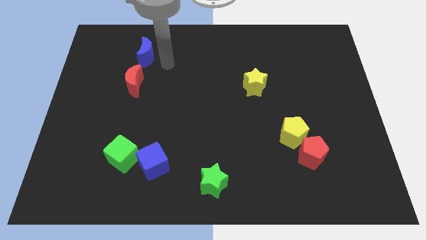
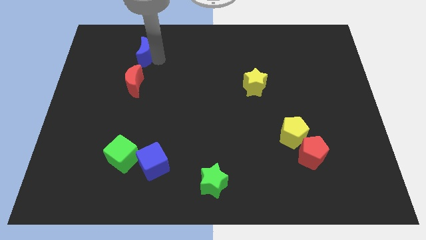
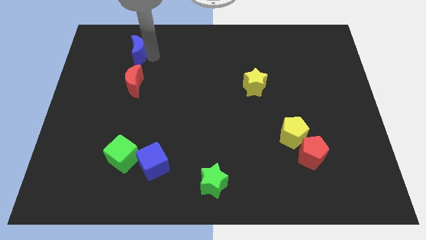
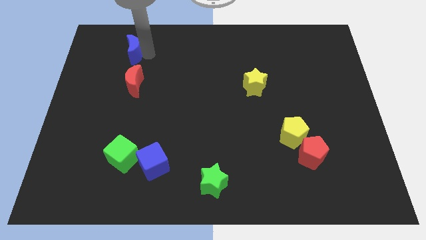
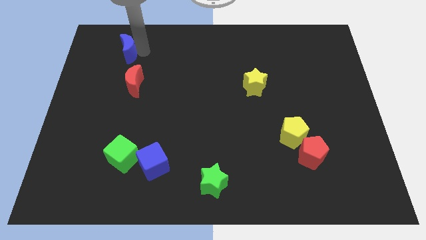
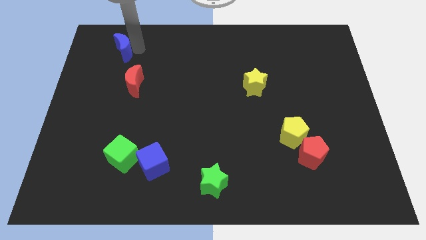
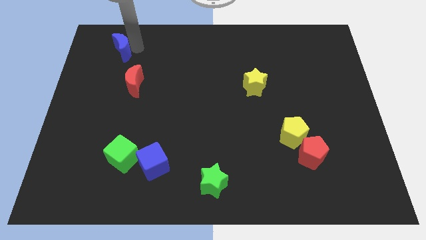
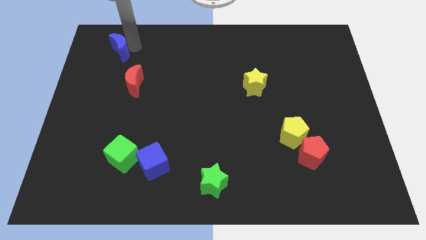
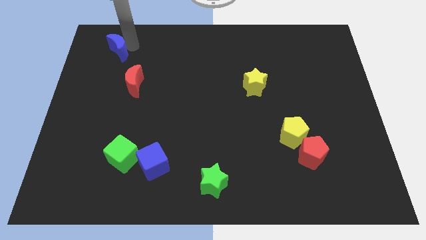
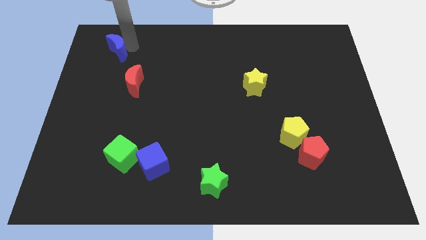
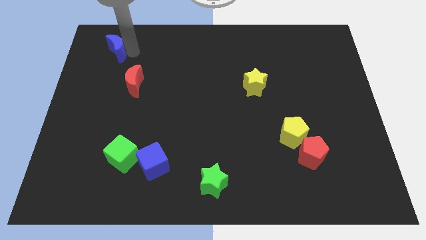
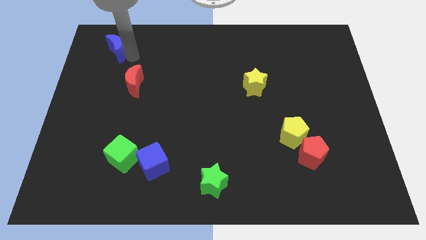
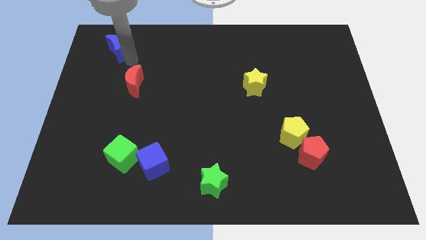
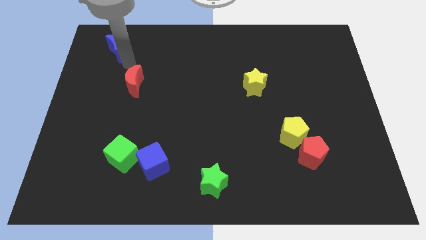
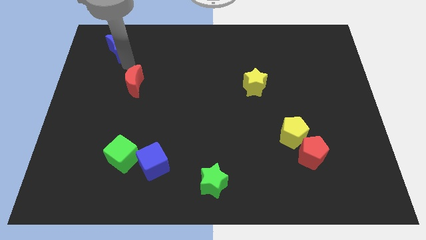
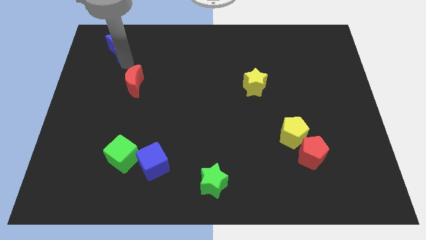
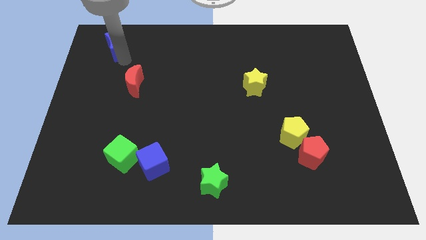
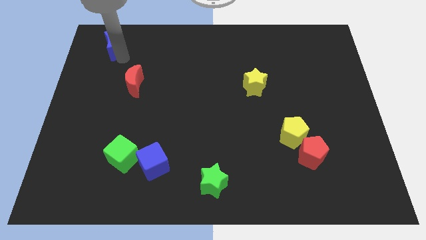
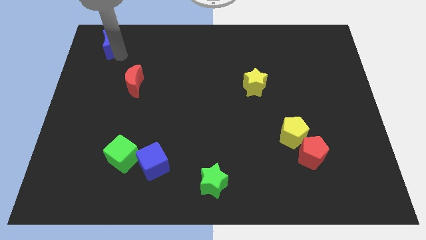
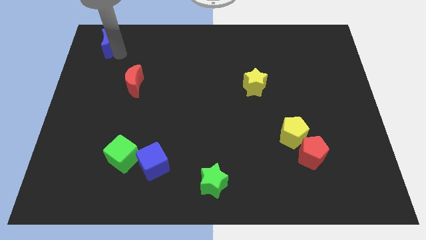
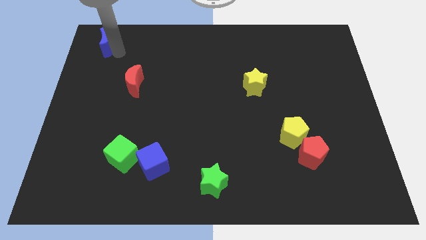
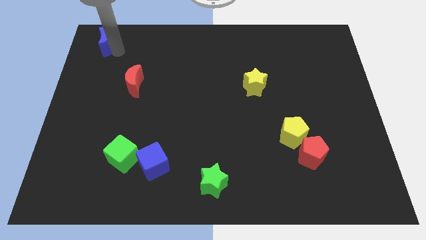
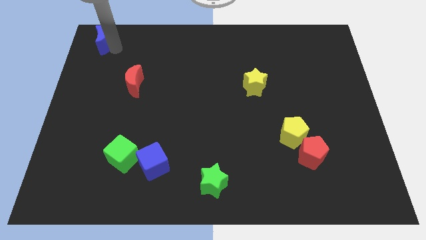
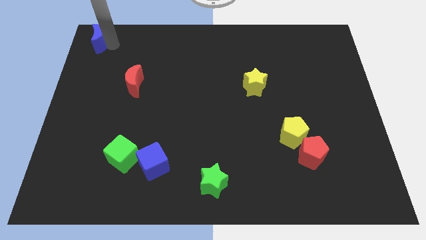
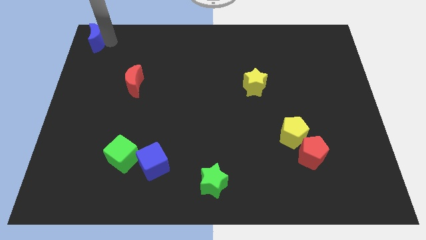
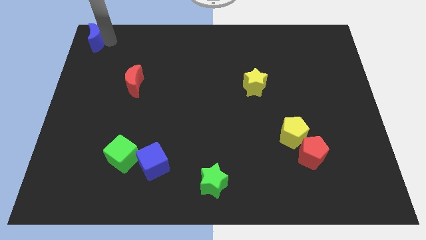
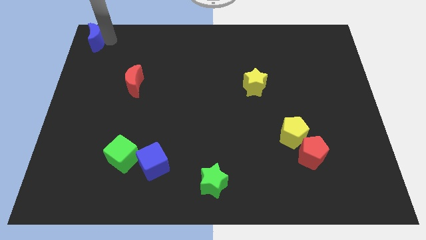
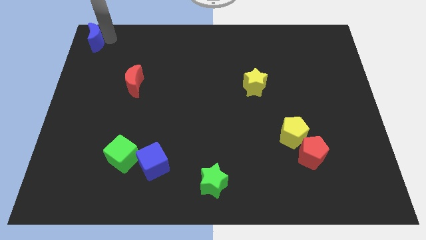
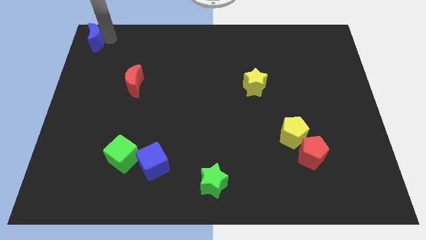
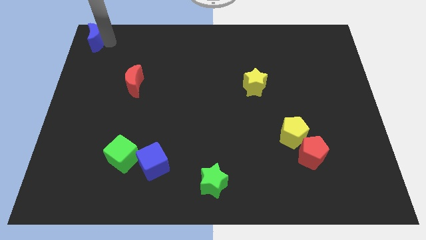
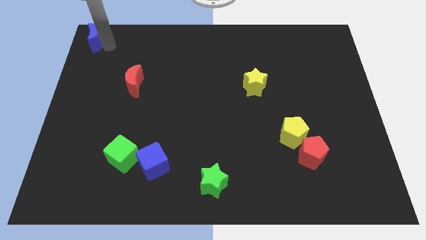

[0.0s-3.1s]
separate blue moon from red moon

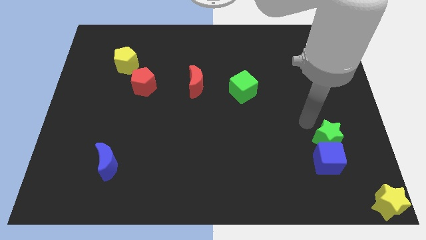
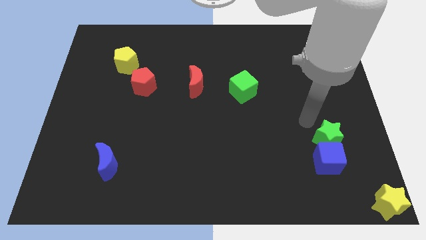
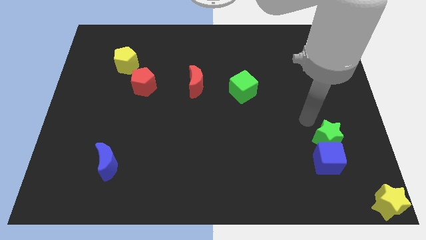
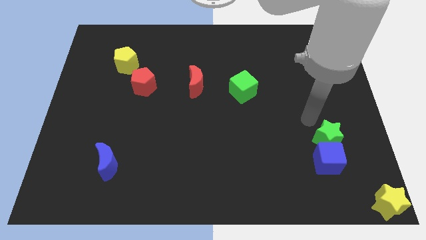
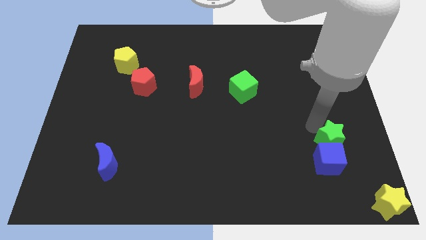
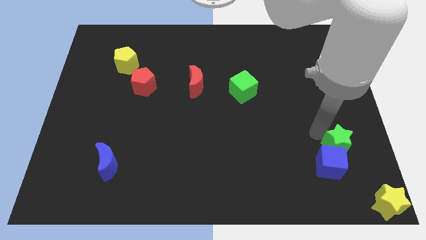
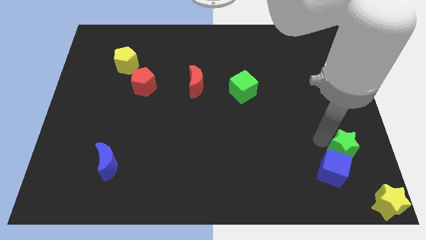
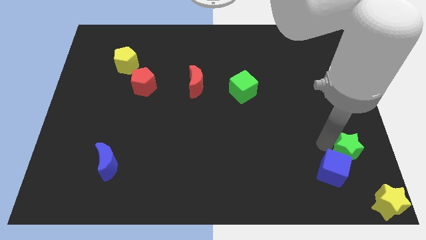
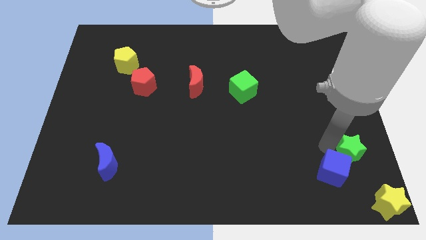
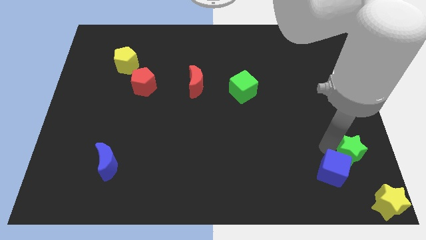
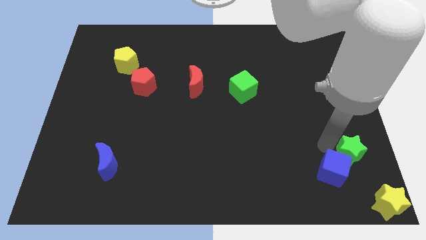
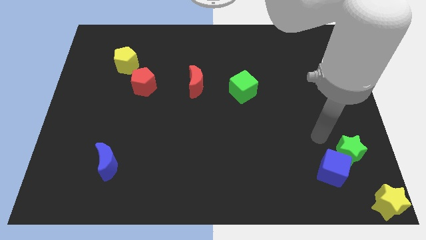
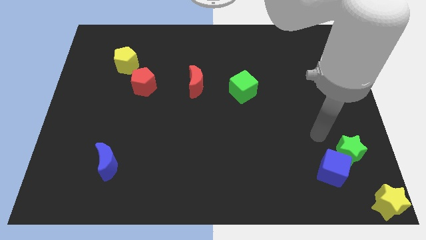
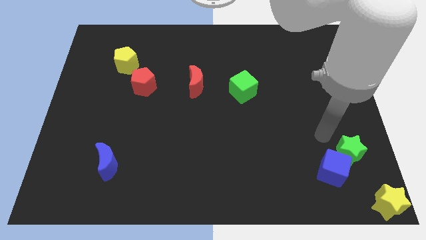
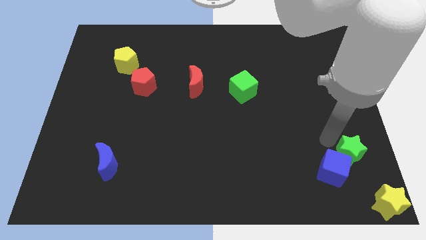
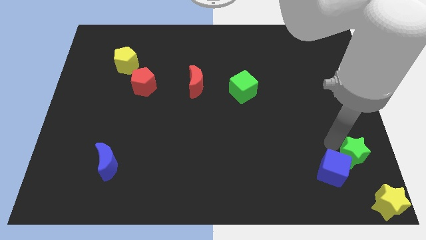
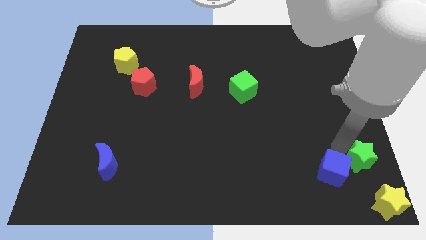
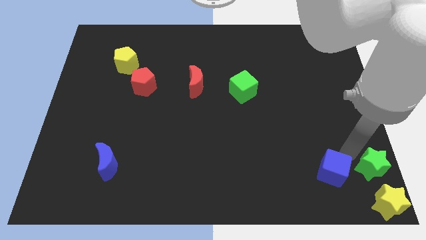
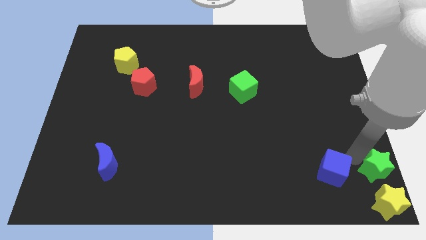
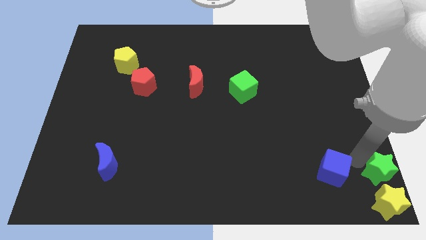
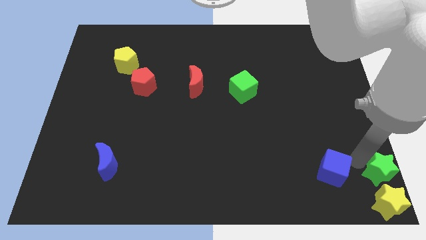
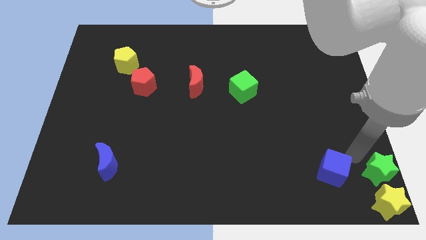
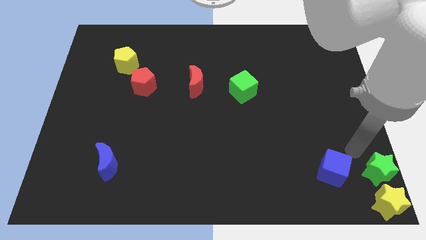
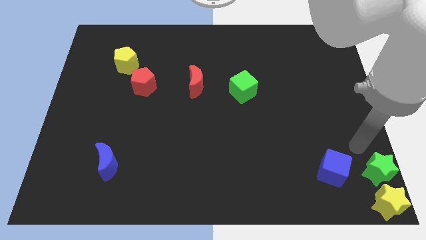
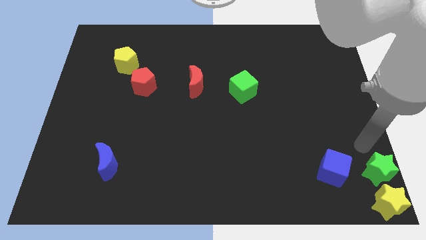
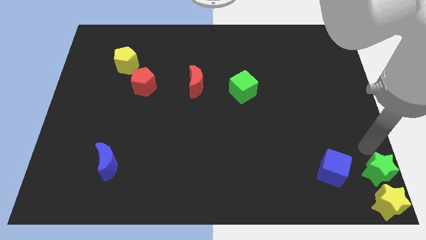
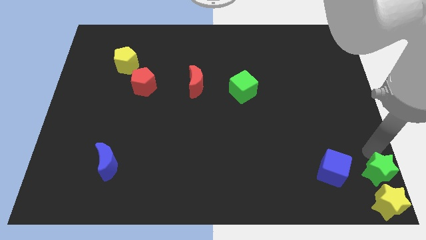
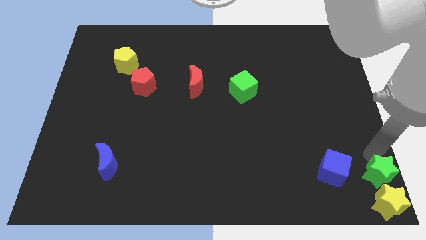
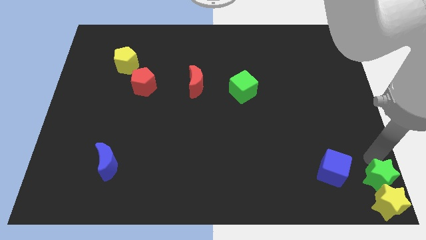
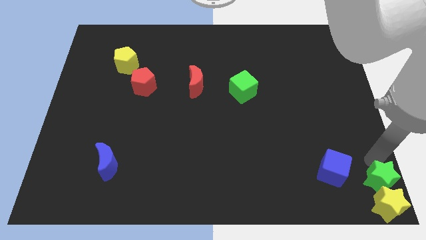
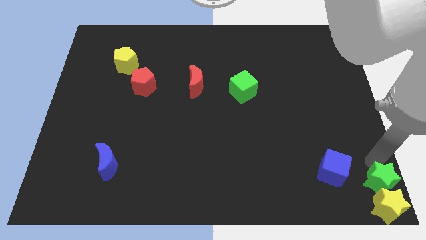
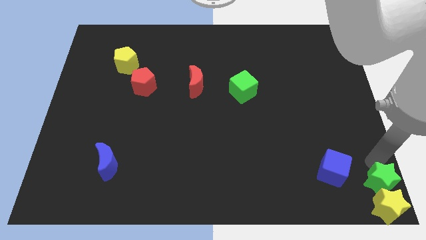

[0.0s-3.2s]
place the green star above the yellow star

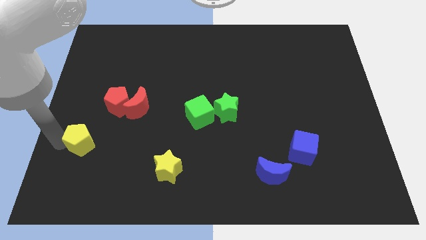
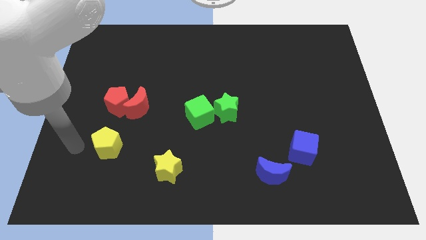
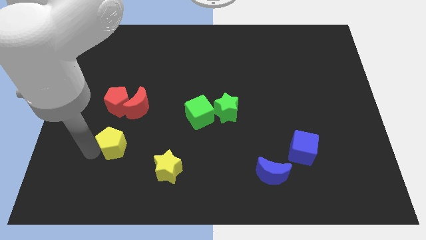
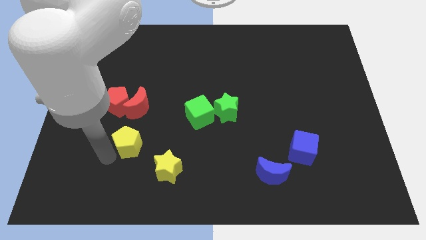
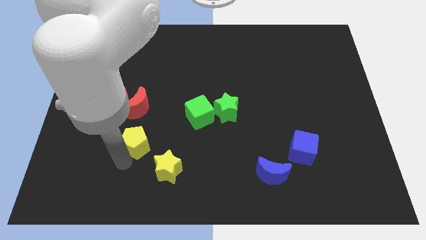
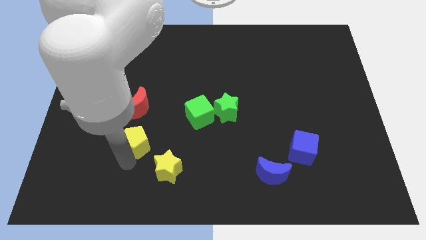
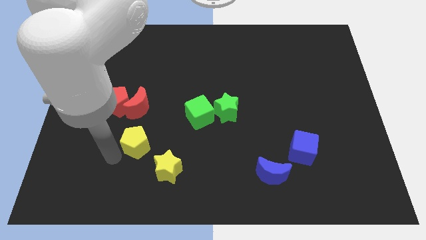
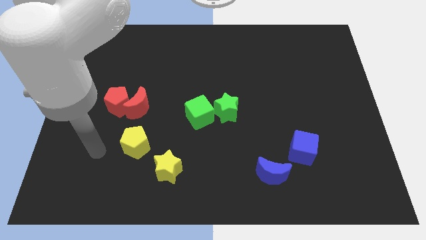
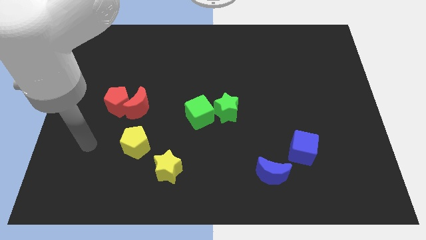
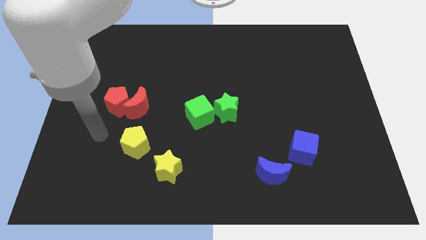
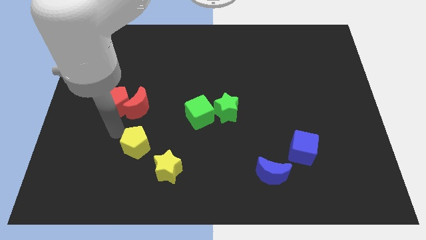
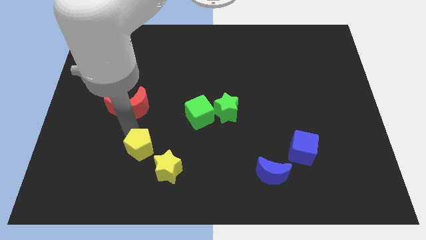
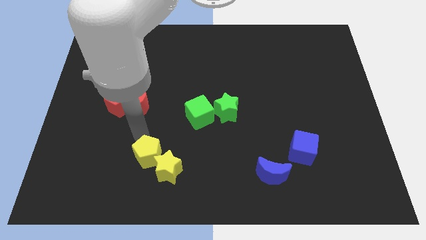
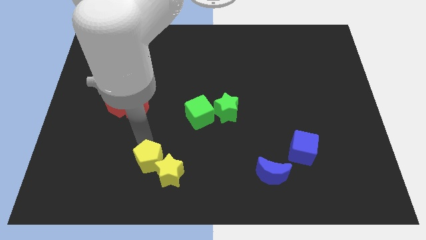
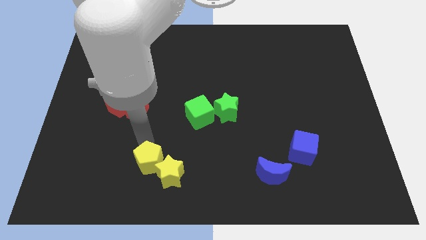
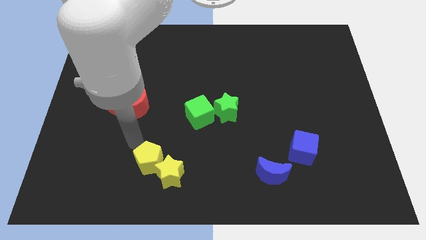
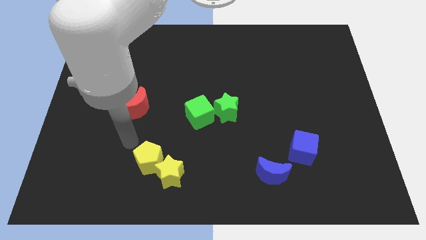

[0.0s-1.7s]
arrange the yellow pentagon at the top left side of the yellow star

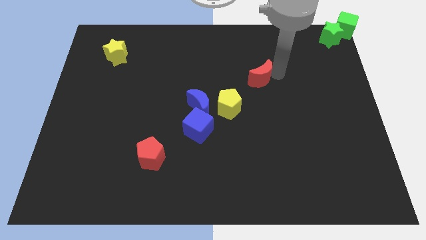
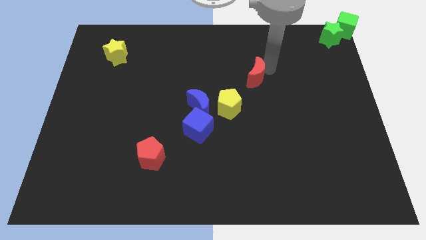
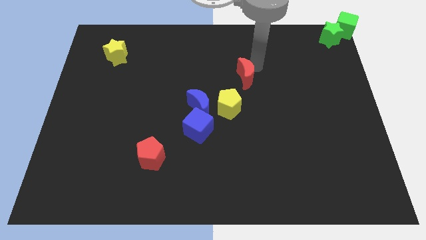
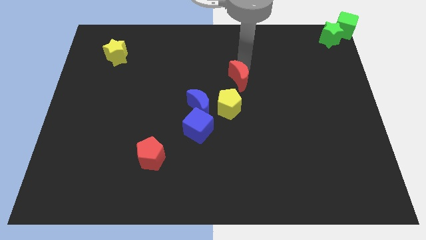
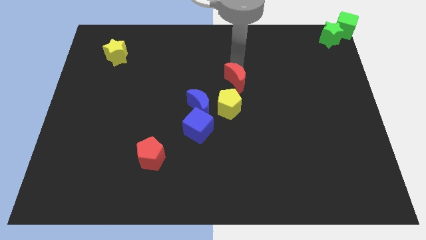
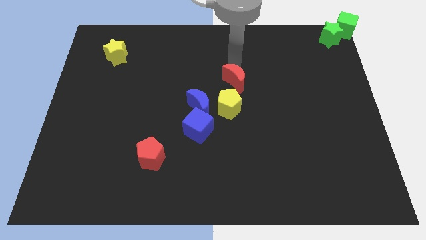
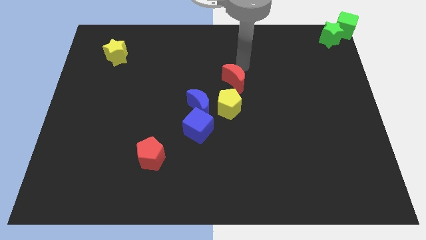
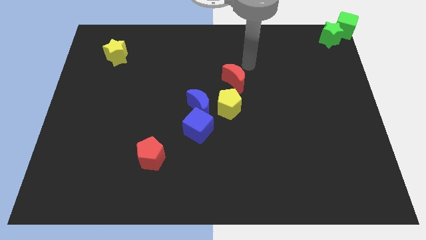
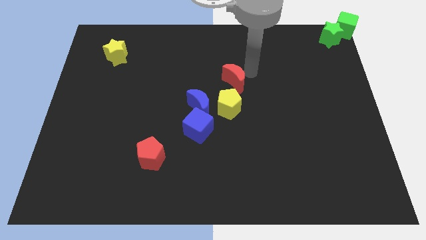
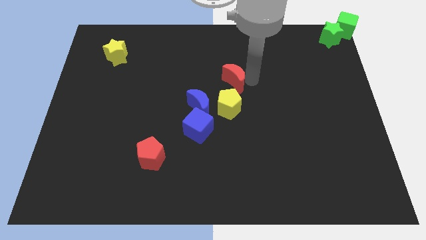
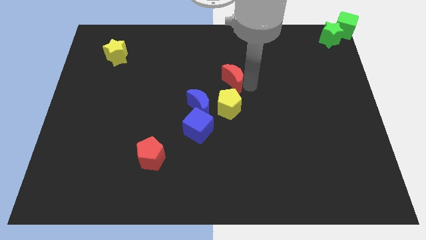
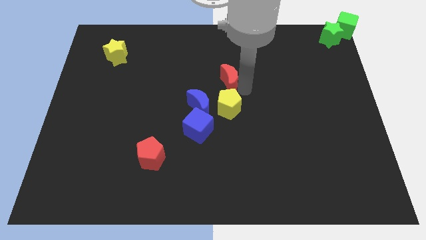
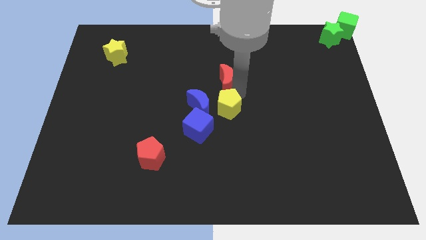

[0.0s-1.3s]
move the red crescent to the center of the board
